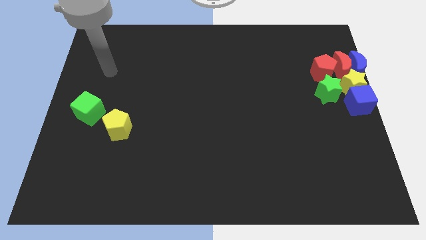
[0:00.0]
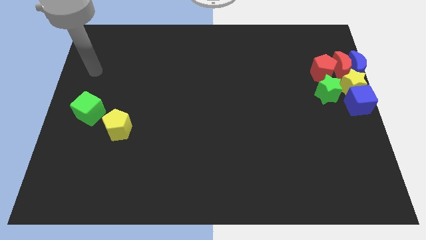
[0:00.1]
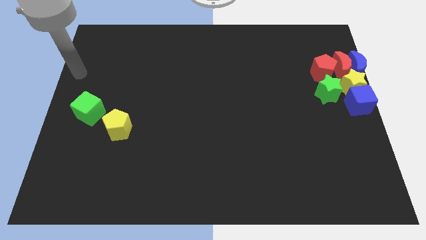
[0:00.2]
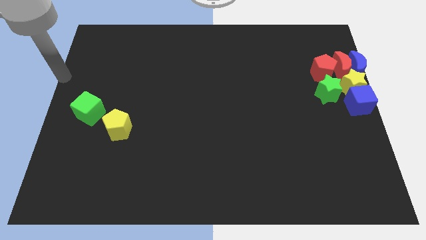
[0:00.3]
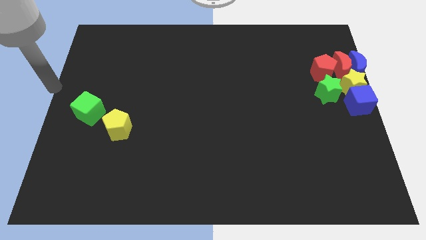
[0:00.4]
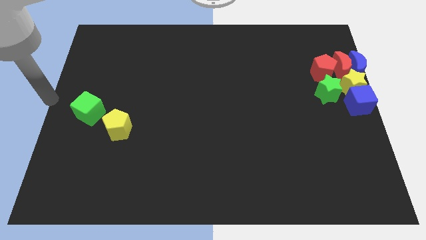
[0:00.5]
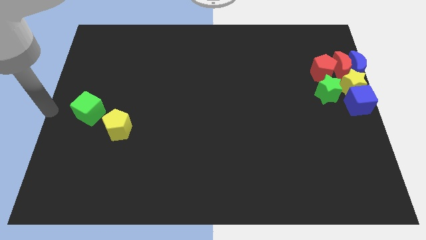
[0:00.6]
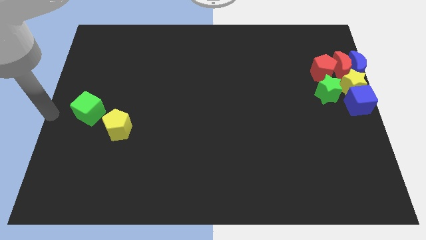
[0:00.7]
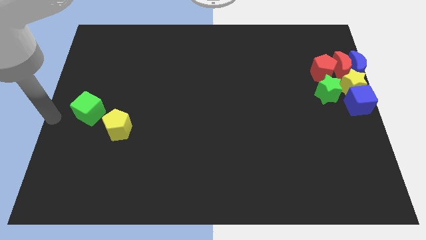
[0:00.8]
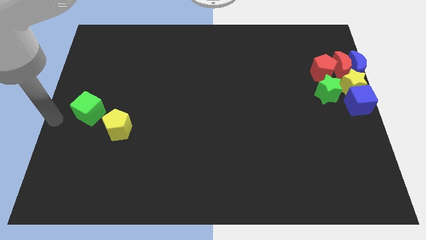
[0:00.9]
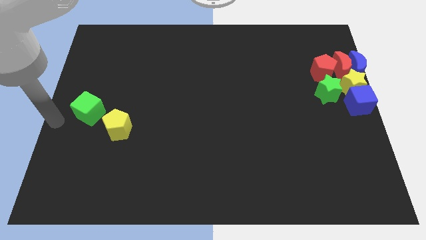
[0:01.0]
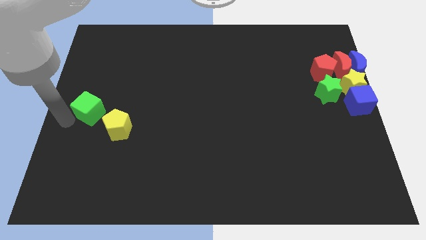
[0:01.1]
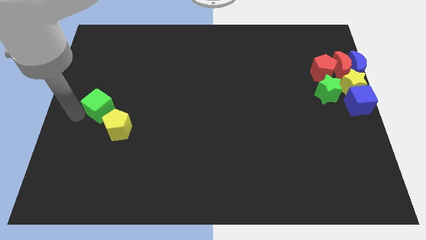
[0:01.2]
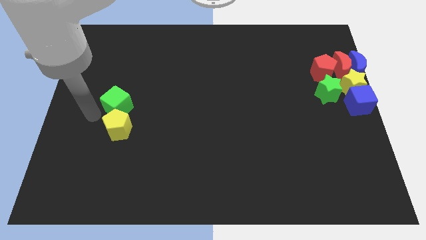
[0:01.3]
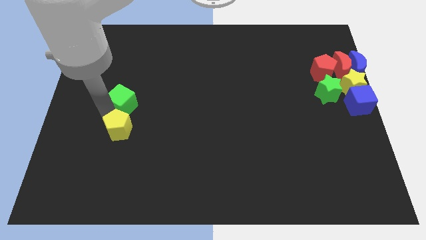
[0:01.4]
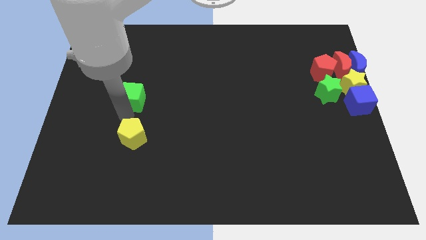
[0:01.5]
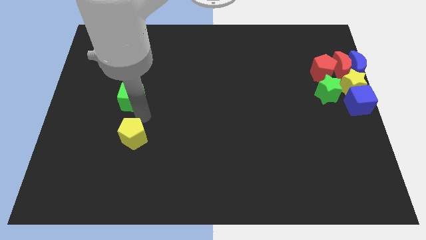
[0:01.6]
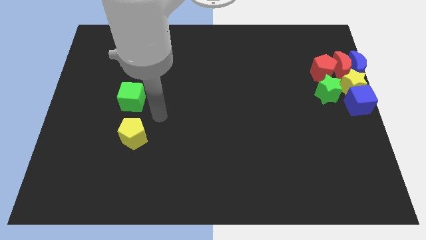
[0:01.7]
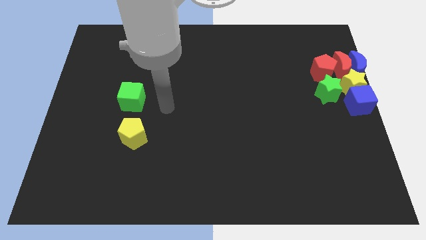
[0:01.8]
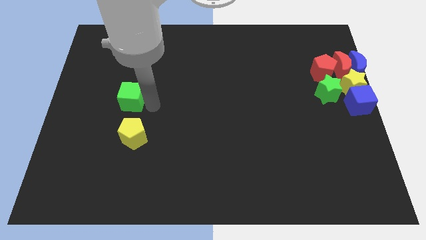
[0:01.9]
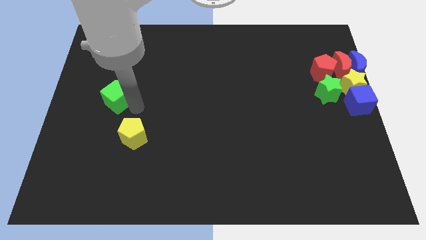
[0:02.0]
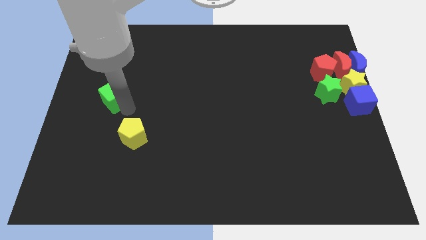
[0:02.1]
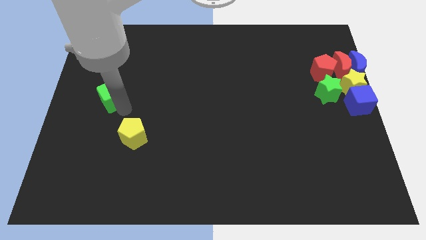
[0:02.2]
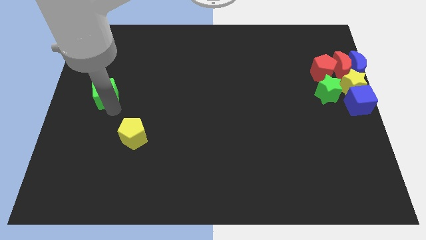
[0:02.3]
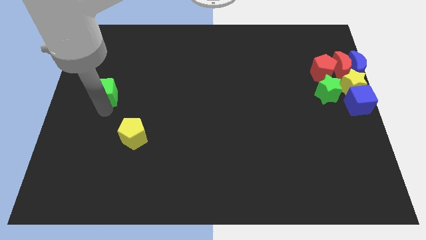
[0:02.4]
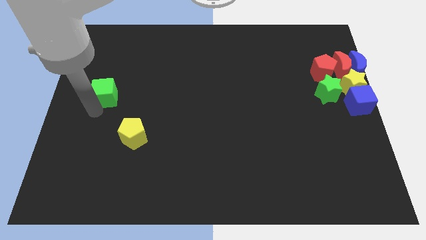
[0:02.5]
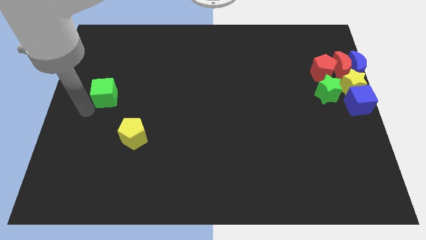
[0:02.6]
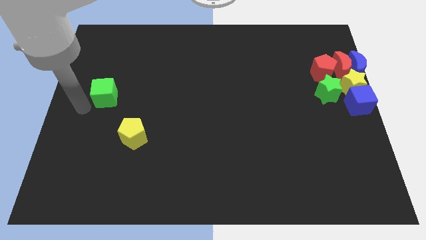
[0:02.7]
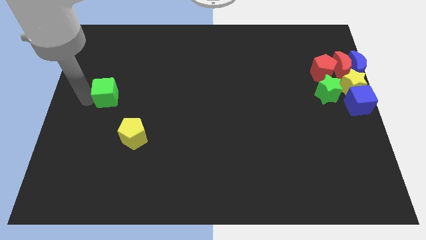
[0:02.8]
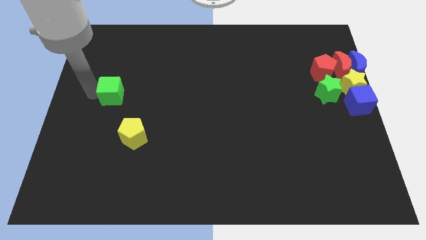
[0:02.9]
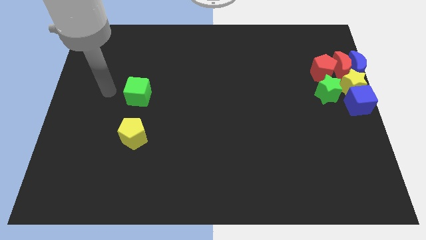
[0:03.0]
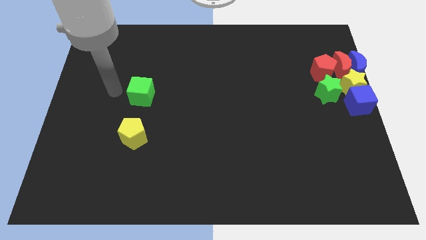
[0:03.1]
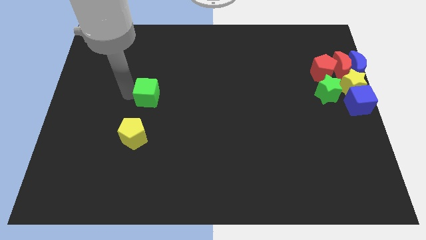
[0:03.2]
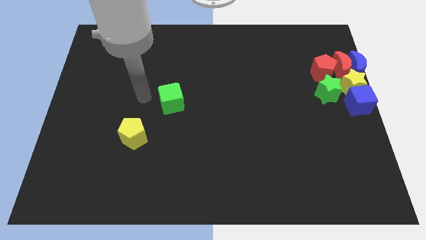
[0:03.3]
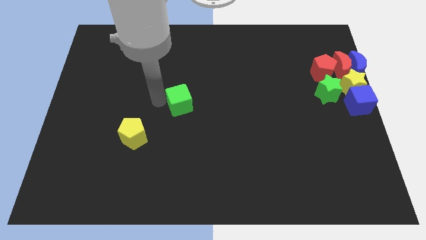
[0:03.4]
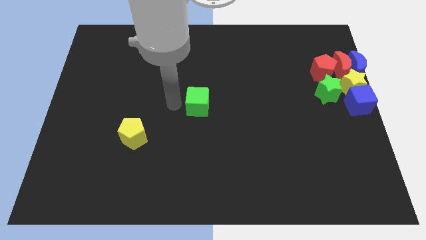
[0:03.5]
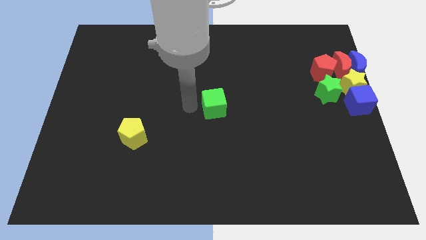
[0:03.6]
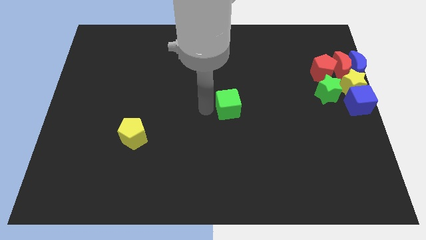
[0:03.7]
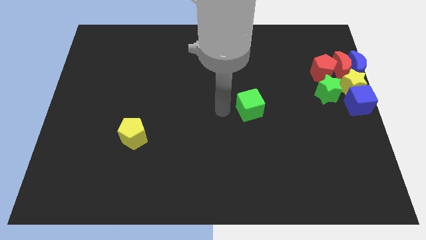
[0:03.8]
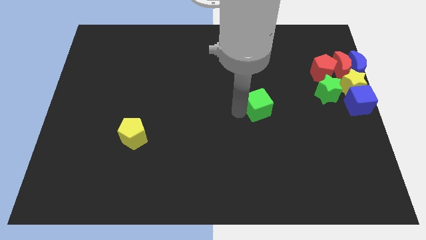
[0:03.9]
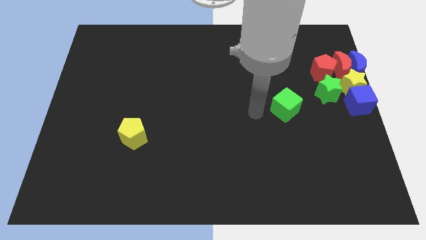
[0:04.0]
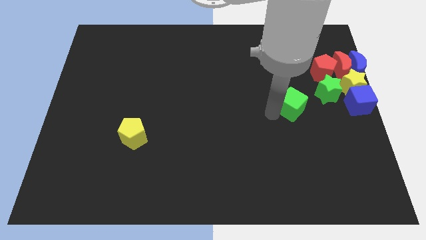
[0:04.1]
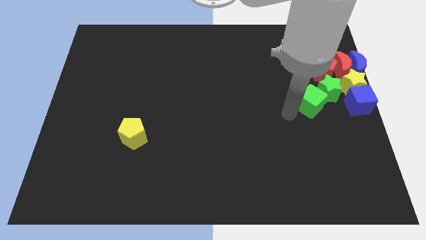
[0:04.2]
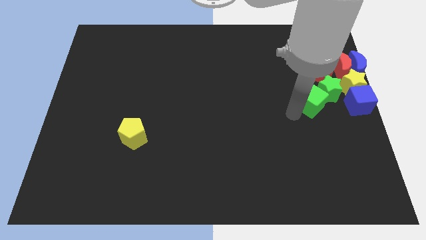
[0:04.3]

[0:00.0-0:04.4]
take the green cube close to the green star

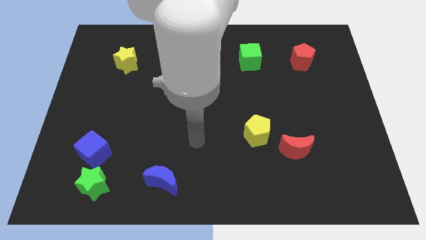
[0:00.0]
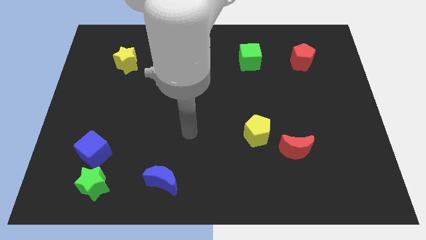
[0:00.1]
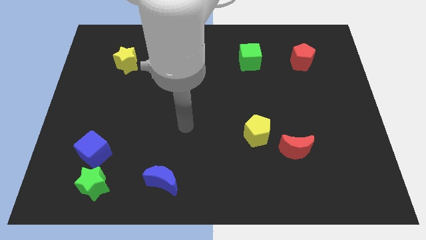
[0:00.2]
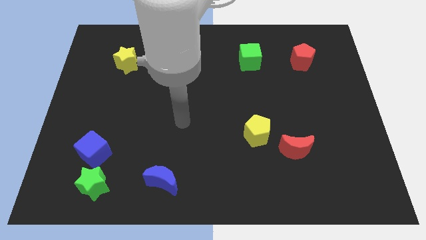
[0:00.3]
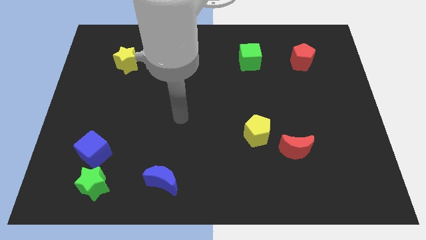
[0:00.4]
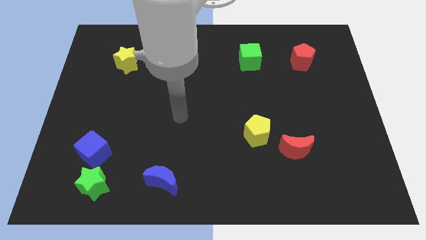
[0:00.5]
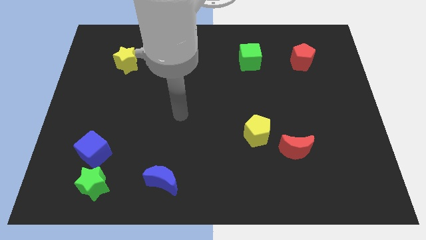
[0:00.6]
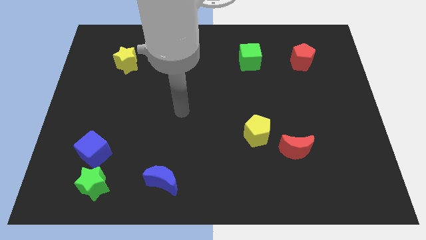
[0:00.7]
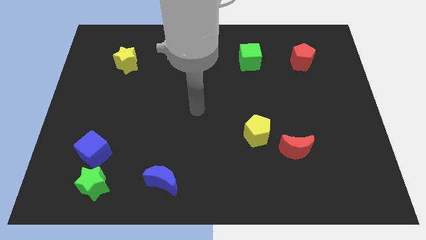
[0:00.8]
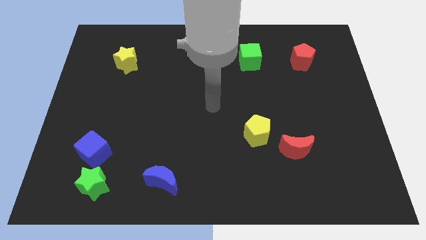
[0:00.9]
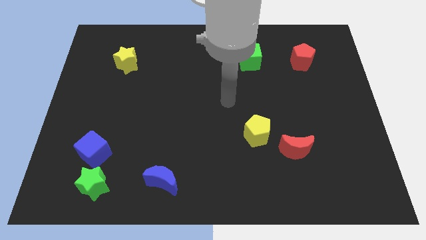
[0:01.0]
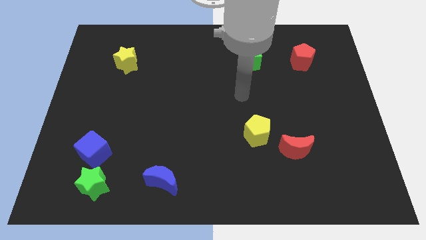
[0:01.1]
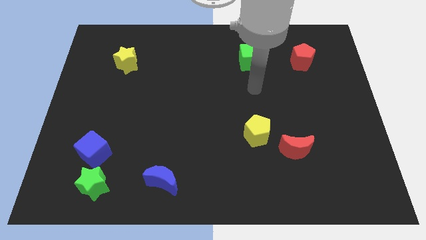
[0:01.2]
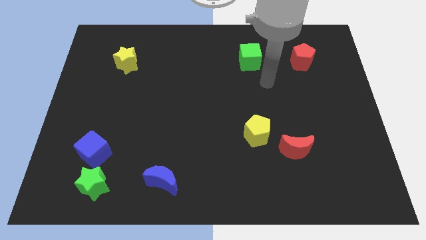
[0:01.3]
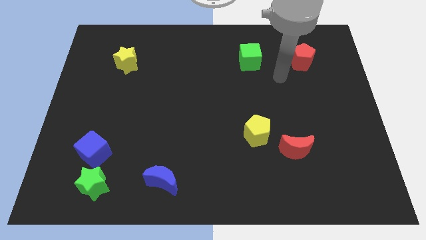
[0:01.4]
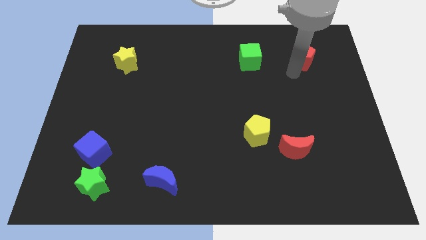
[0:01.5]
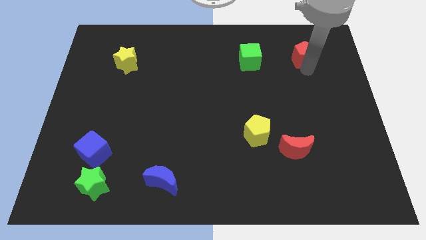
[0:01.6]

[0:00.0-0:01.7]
touch the red pentagon

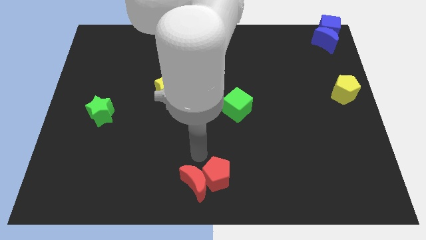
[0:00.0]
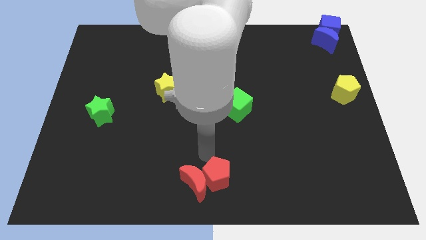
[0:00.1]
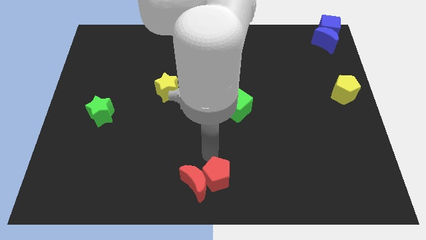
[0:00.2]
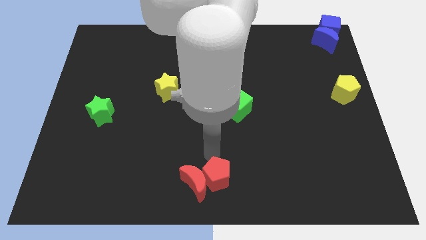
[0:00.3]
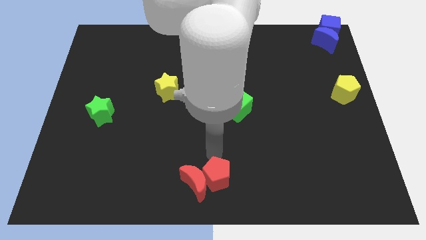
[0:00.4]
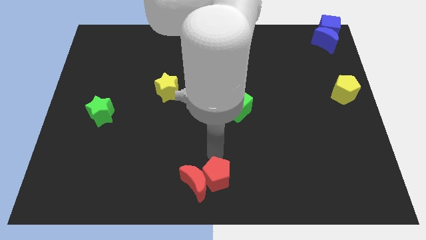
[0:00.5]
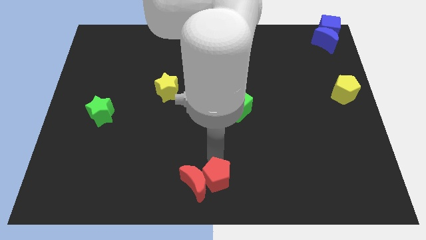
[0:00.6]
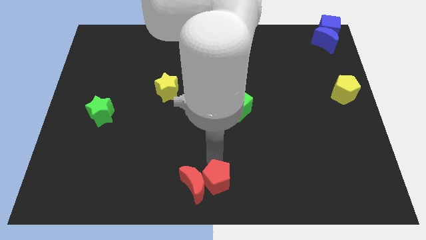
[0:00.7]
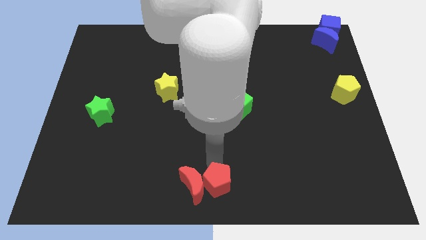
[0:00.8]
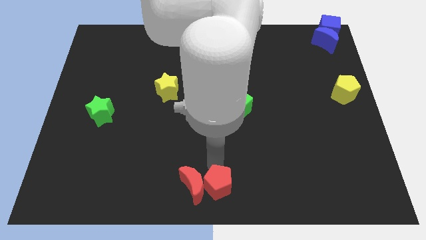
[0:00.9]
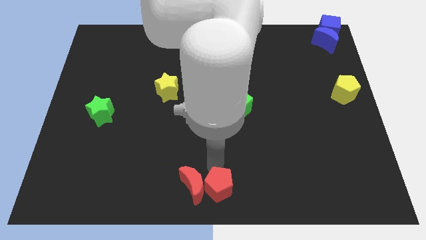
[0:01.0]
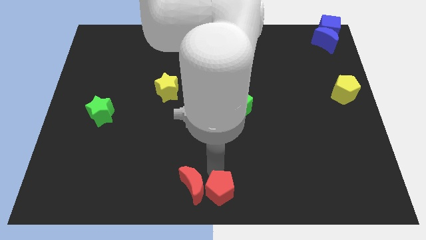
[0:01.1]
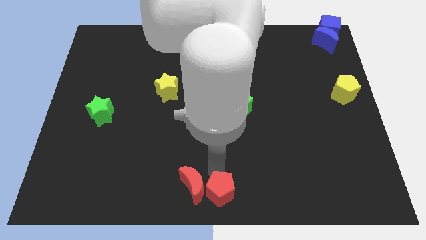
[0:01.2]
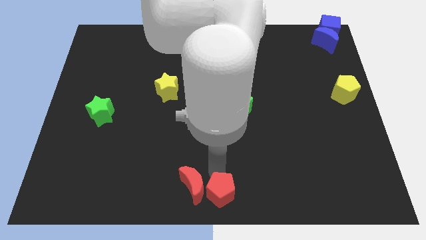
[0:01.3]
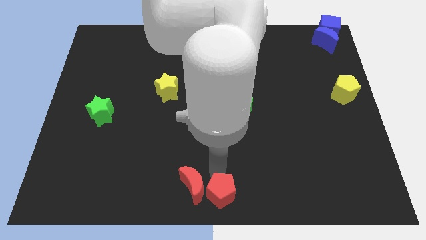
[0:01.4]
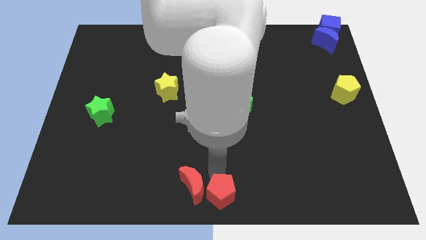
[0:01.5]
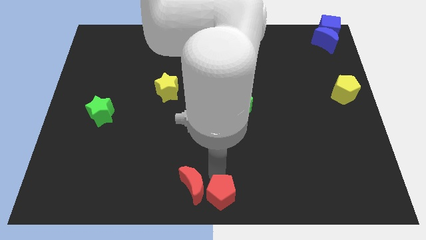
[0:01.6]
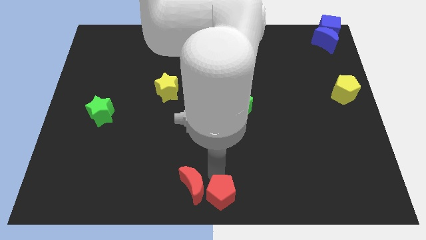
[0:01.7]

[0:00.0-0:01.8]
push red pentagon towards the bottom center of the board

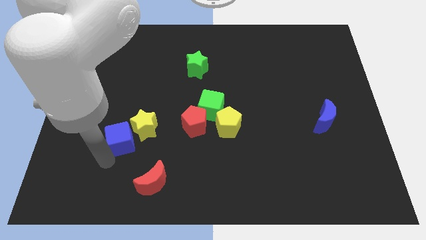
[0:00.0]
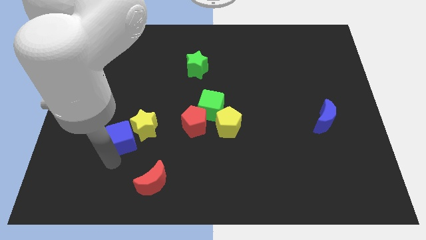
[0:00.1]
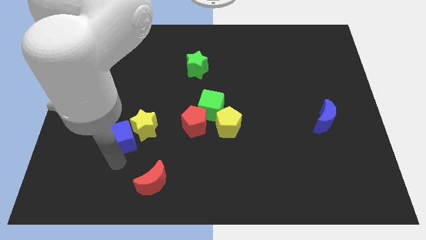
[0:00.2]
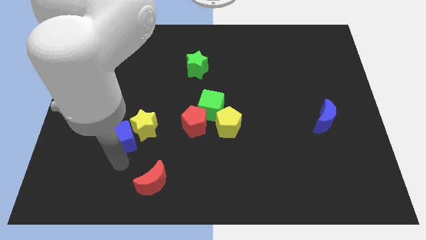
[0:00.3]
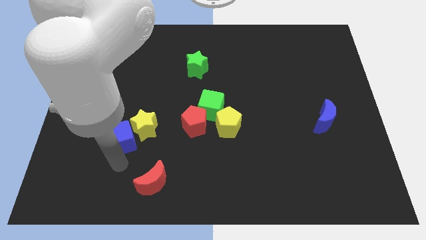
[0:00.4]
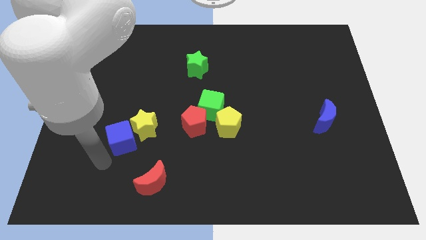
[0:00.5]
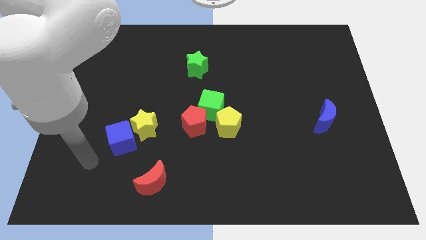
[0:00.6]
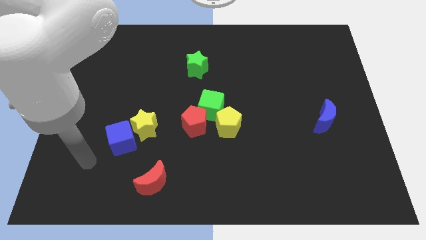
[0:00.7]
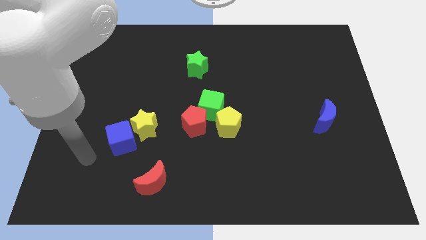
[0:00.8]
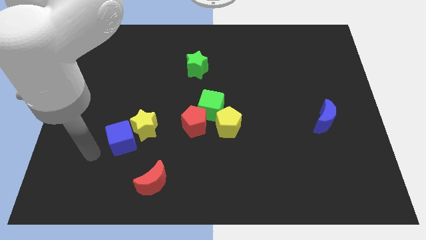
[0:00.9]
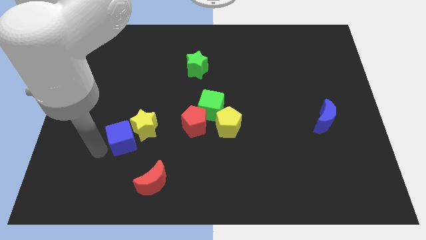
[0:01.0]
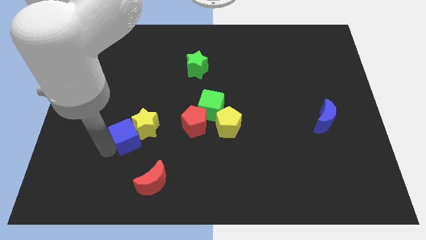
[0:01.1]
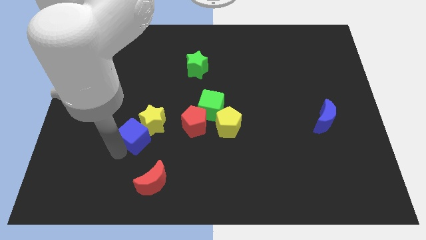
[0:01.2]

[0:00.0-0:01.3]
push blue cube close to yellow star
